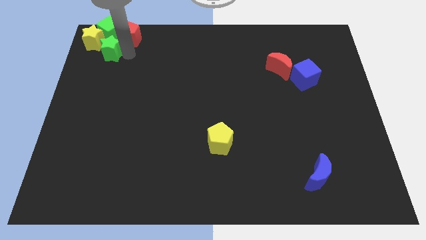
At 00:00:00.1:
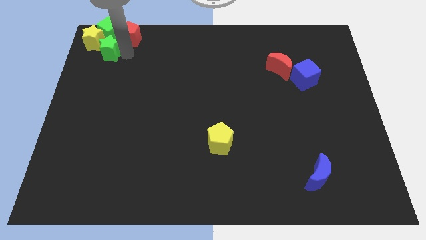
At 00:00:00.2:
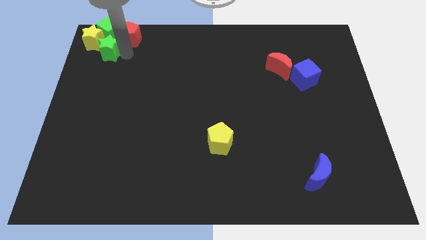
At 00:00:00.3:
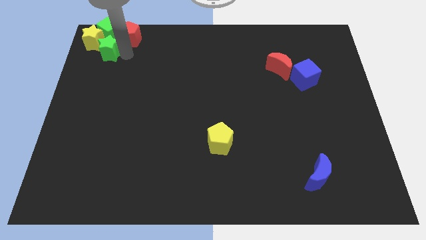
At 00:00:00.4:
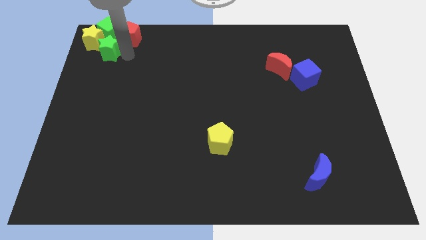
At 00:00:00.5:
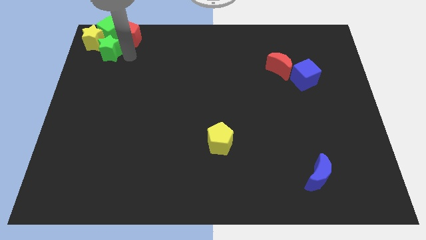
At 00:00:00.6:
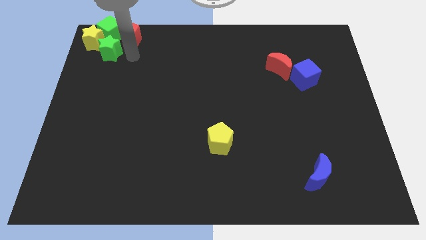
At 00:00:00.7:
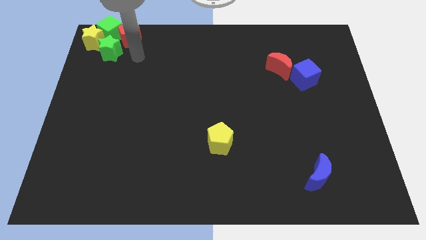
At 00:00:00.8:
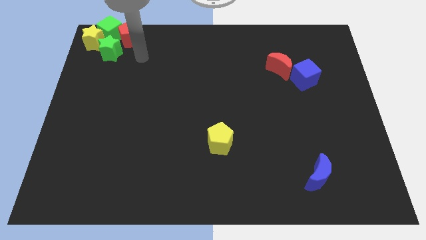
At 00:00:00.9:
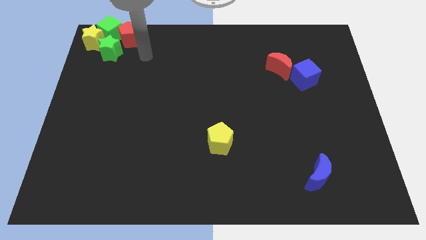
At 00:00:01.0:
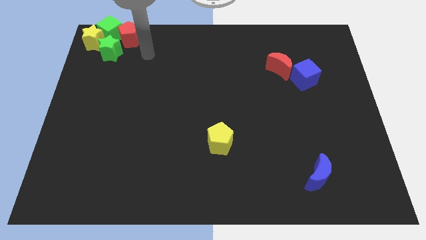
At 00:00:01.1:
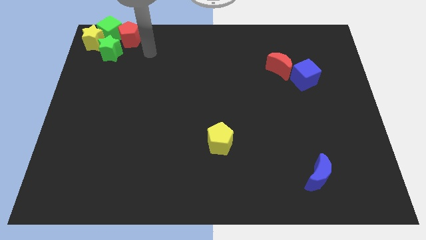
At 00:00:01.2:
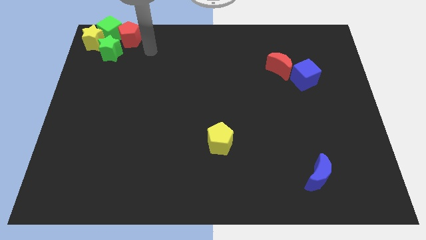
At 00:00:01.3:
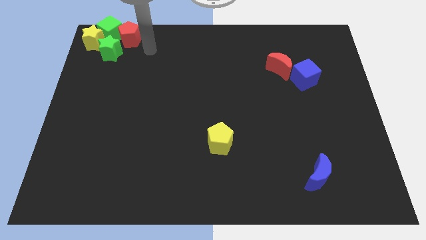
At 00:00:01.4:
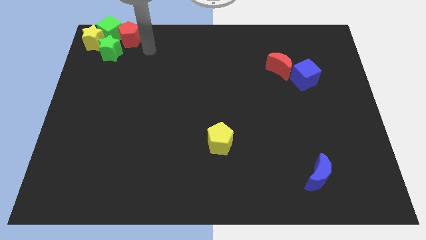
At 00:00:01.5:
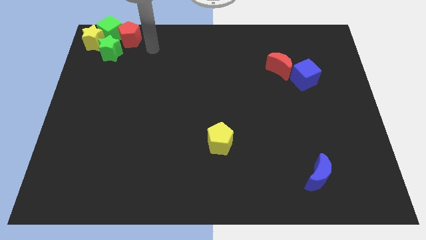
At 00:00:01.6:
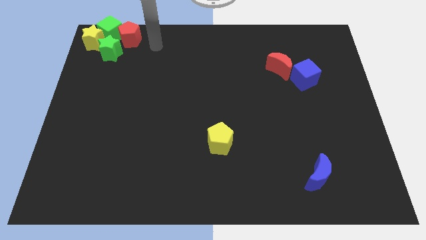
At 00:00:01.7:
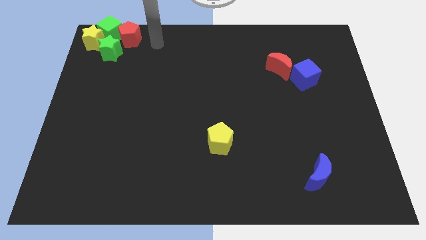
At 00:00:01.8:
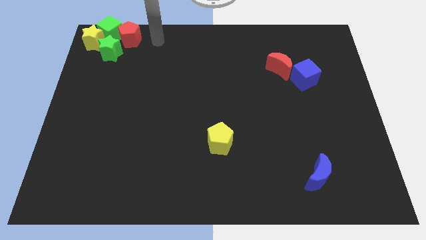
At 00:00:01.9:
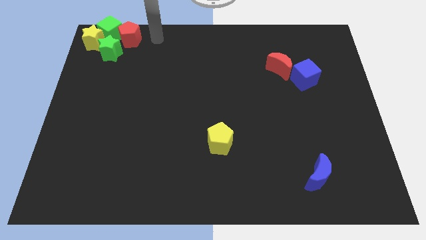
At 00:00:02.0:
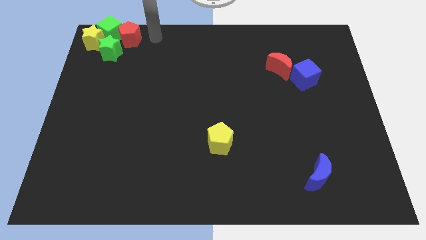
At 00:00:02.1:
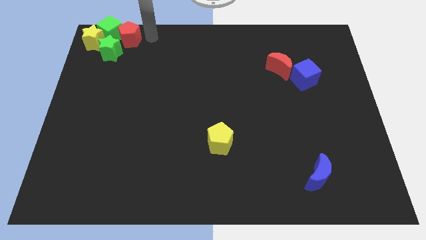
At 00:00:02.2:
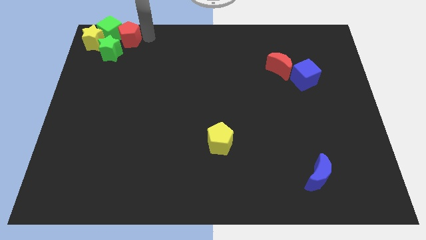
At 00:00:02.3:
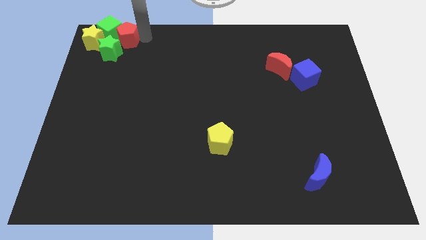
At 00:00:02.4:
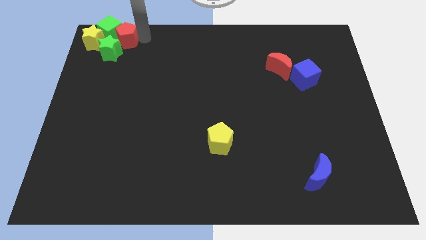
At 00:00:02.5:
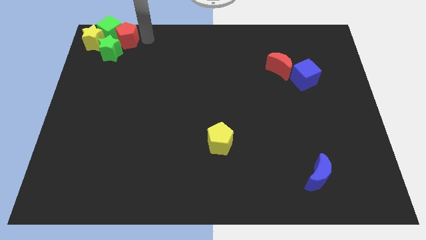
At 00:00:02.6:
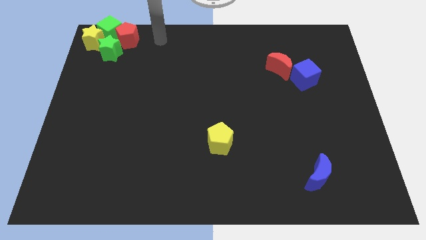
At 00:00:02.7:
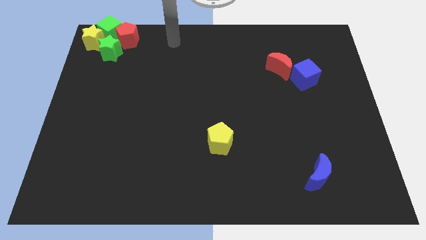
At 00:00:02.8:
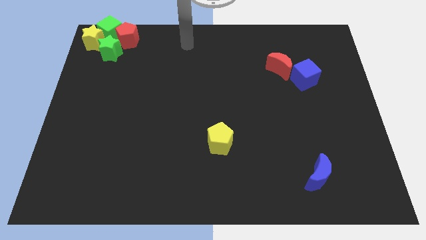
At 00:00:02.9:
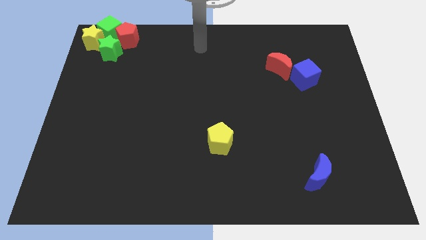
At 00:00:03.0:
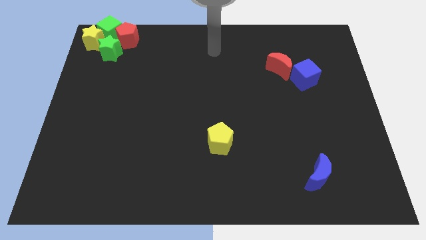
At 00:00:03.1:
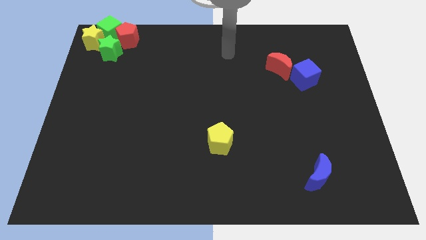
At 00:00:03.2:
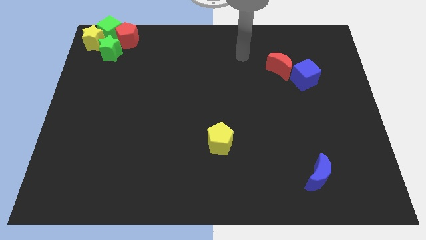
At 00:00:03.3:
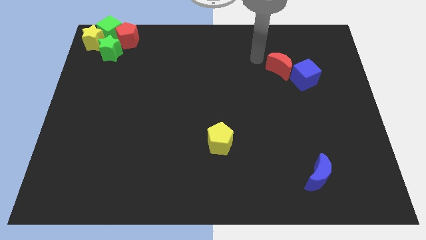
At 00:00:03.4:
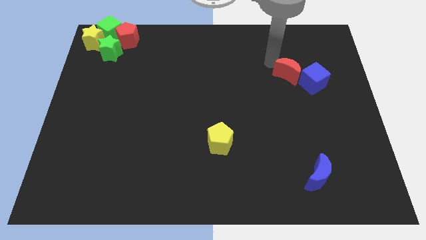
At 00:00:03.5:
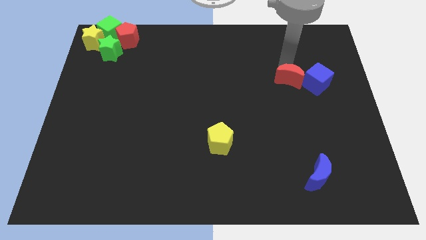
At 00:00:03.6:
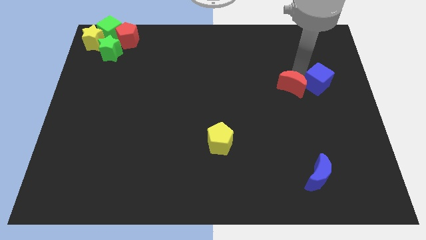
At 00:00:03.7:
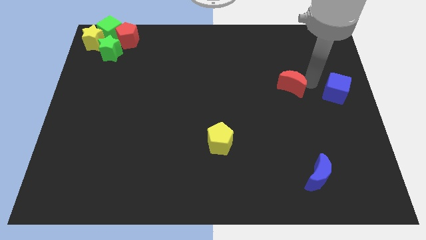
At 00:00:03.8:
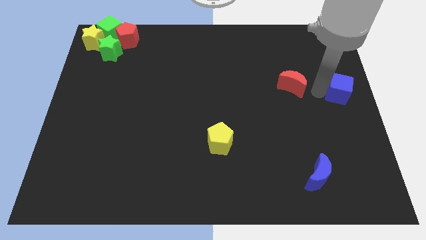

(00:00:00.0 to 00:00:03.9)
separate the red moon from the blue cube

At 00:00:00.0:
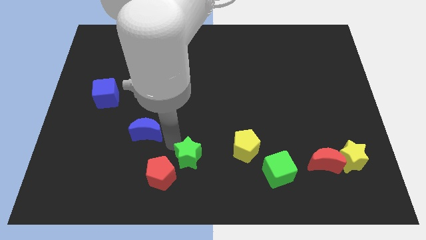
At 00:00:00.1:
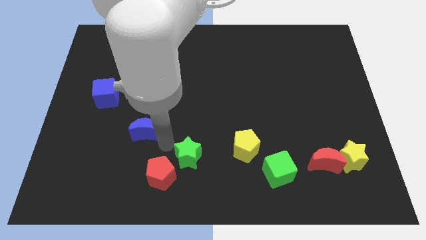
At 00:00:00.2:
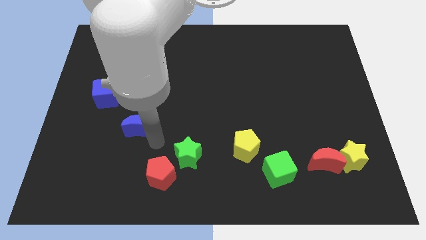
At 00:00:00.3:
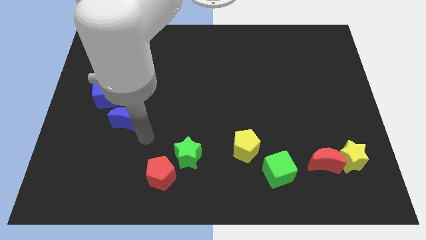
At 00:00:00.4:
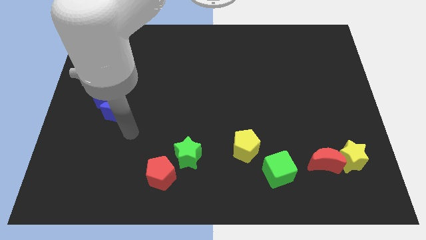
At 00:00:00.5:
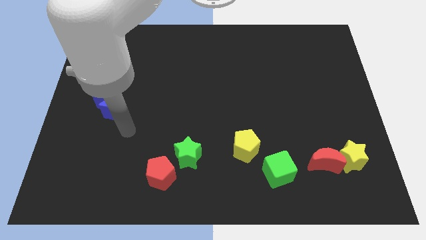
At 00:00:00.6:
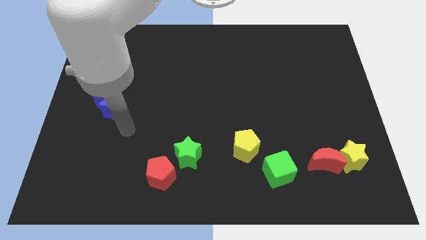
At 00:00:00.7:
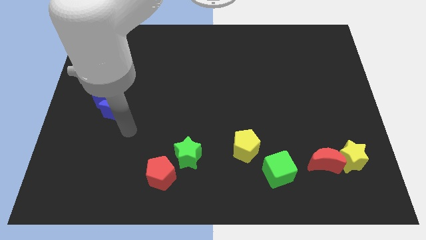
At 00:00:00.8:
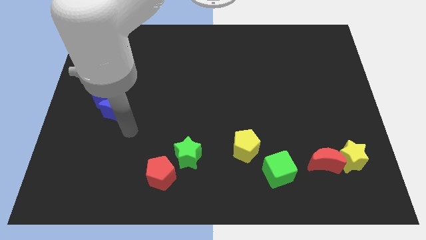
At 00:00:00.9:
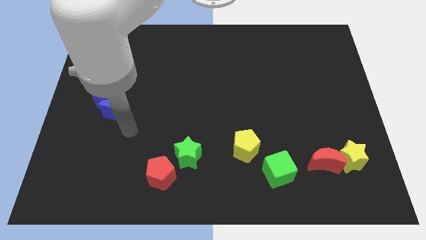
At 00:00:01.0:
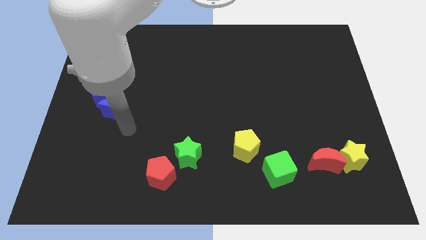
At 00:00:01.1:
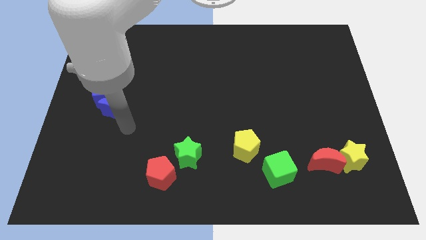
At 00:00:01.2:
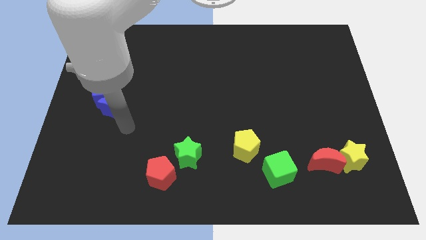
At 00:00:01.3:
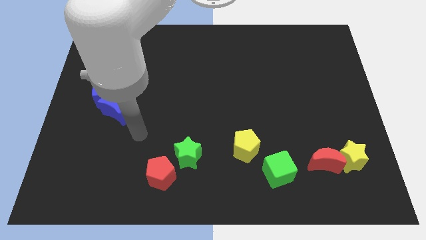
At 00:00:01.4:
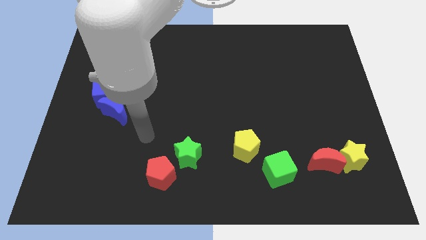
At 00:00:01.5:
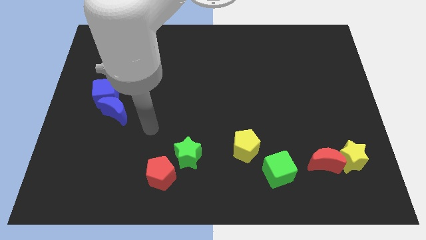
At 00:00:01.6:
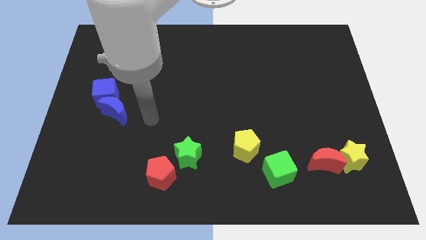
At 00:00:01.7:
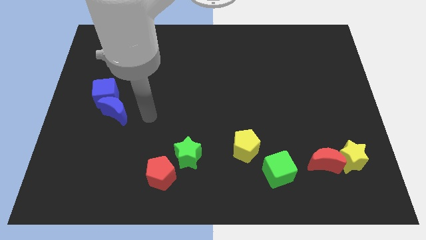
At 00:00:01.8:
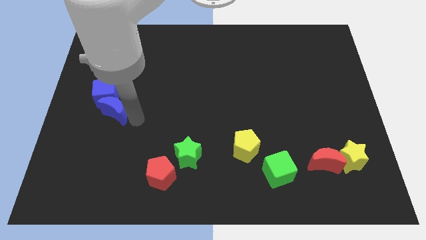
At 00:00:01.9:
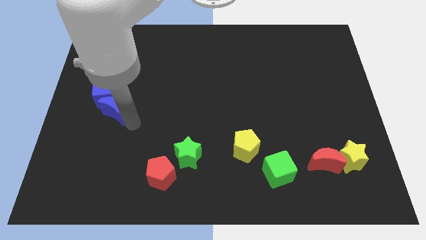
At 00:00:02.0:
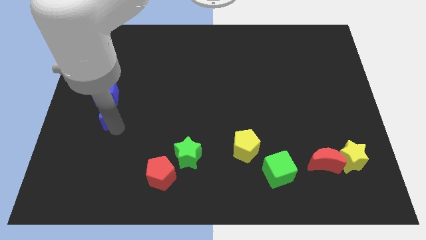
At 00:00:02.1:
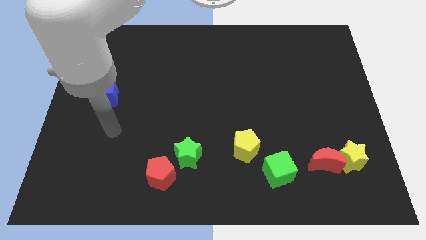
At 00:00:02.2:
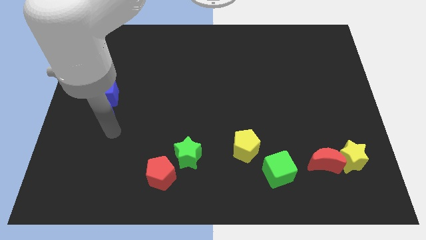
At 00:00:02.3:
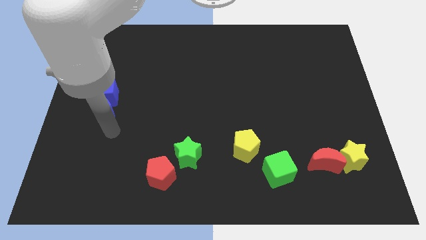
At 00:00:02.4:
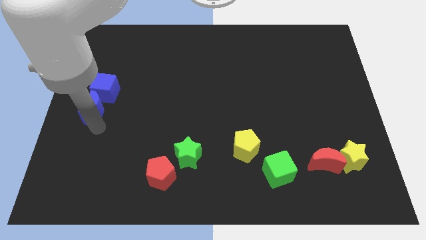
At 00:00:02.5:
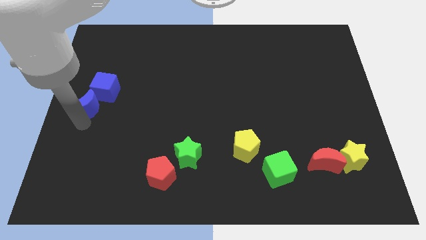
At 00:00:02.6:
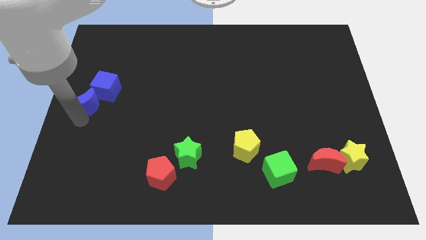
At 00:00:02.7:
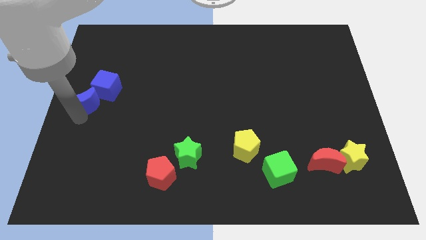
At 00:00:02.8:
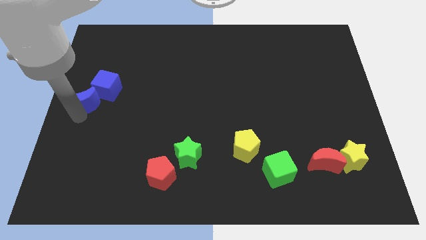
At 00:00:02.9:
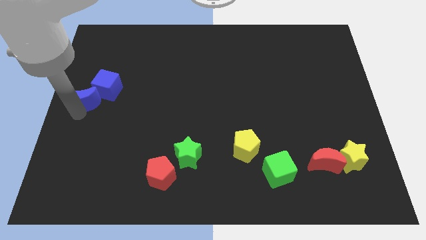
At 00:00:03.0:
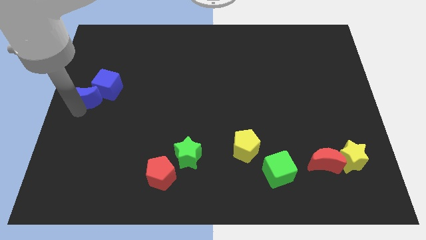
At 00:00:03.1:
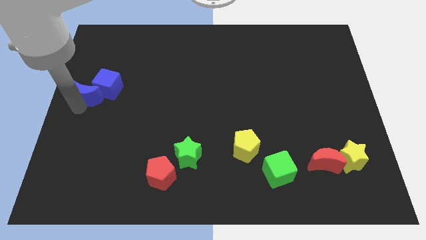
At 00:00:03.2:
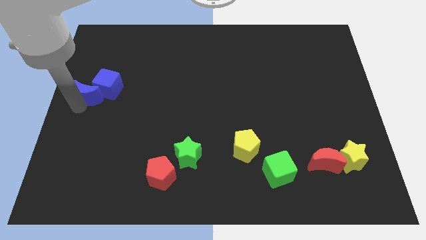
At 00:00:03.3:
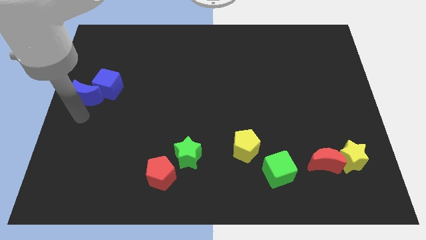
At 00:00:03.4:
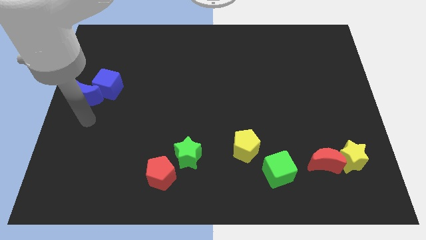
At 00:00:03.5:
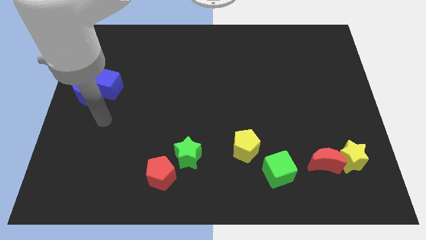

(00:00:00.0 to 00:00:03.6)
place the blue moon to the left of blue cube

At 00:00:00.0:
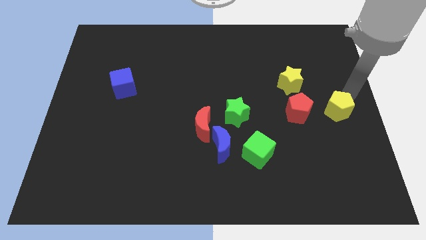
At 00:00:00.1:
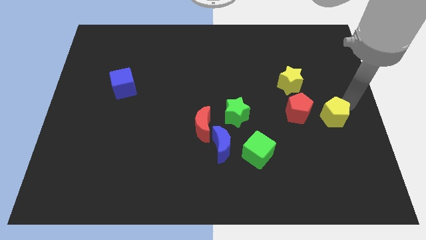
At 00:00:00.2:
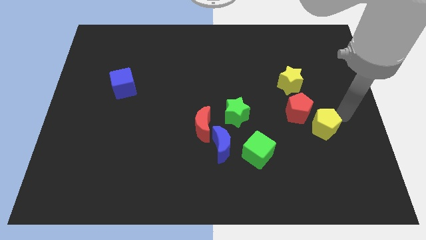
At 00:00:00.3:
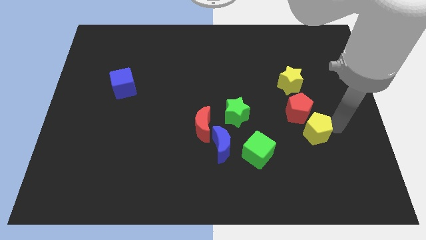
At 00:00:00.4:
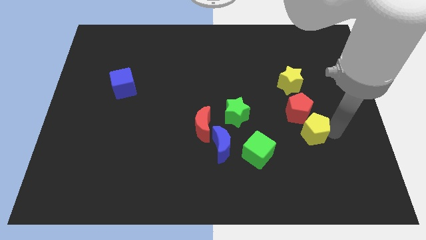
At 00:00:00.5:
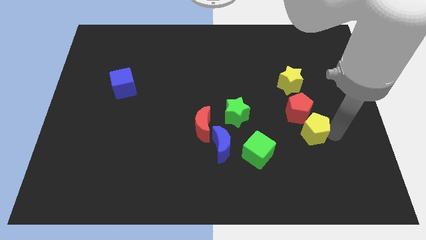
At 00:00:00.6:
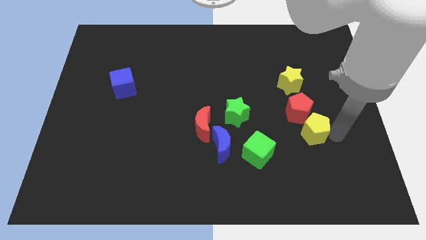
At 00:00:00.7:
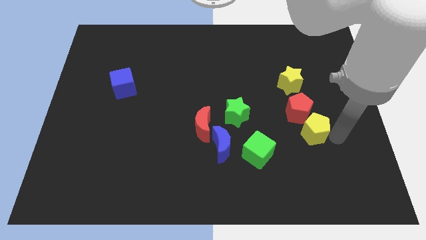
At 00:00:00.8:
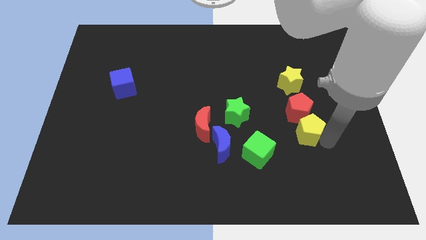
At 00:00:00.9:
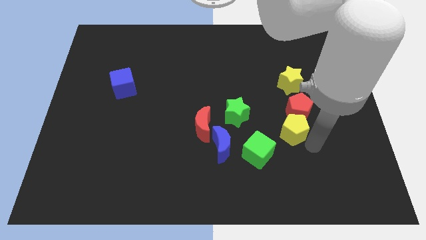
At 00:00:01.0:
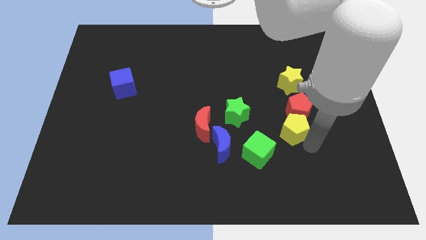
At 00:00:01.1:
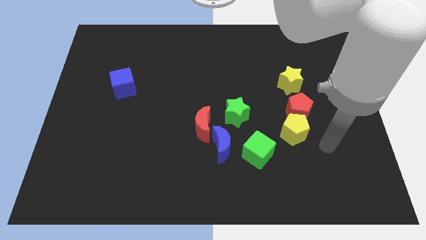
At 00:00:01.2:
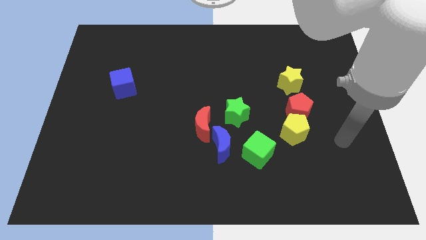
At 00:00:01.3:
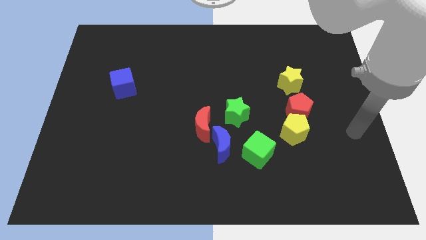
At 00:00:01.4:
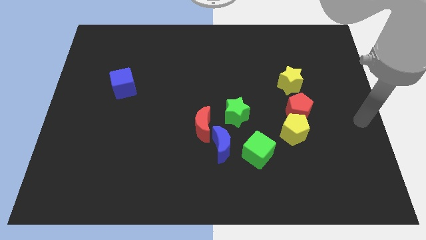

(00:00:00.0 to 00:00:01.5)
place the yellow pentagon below the red pentagon
